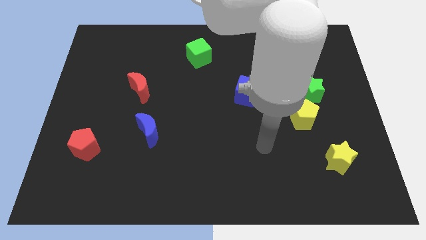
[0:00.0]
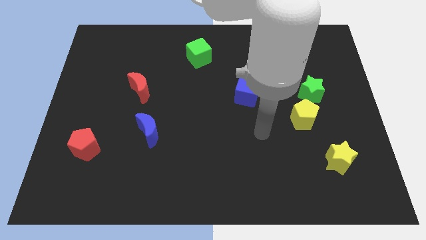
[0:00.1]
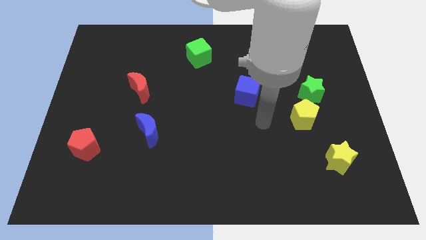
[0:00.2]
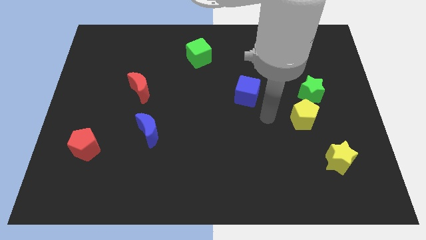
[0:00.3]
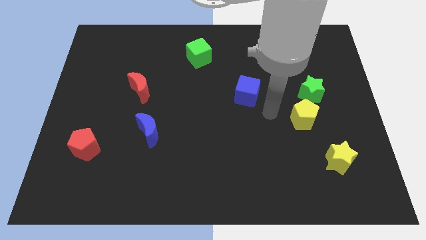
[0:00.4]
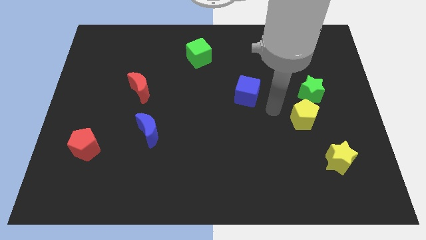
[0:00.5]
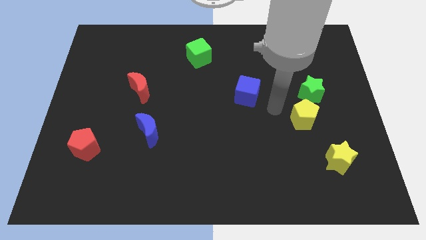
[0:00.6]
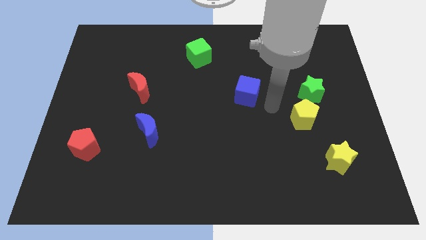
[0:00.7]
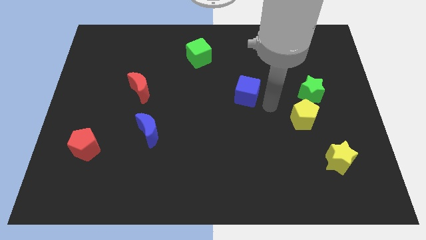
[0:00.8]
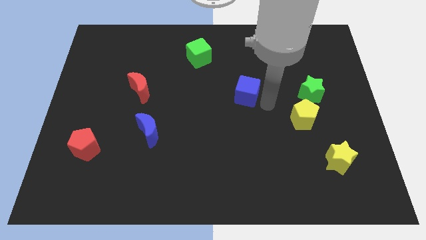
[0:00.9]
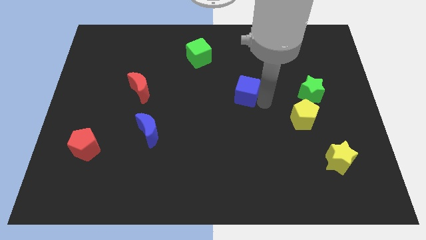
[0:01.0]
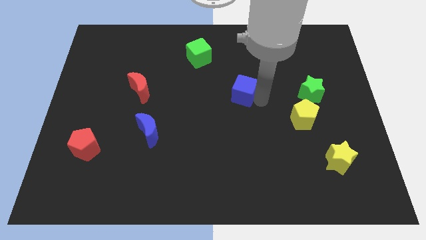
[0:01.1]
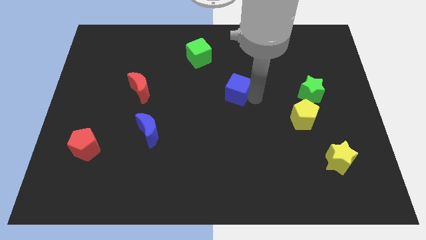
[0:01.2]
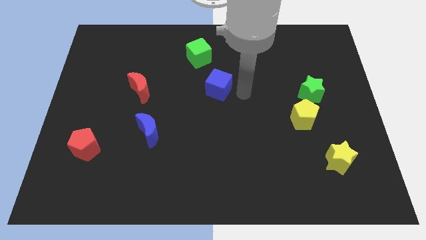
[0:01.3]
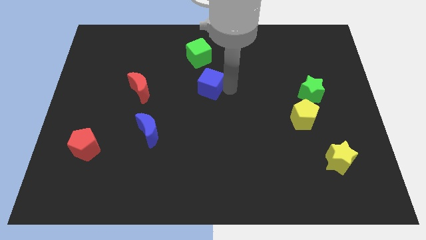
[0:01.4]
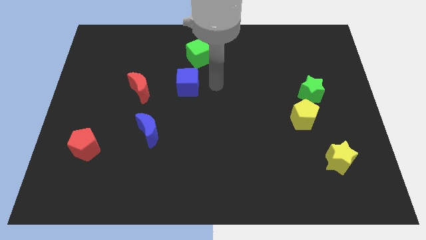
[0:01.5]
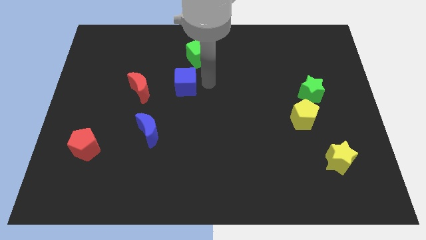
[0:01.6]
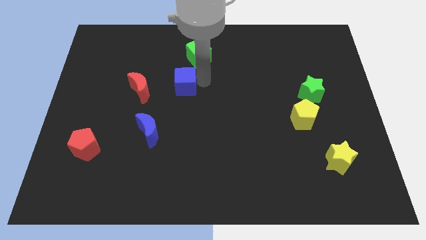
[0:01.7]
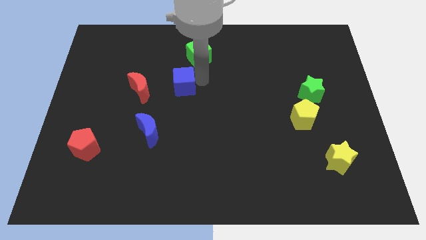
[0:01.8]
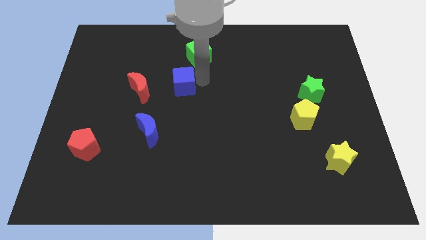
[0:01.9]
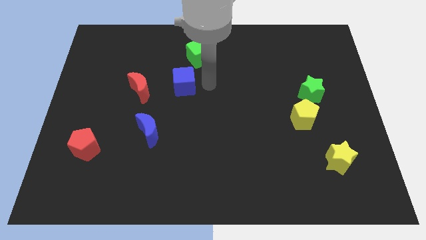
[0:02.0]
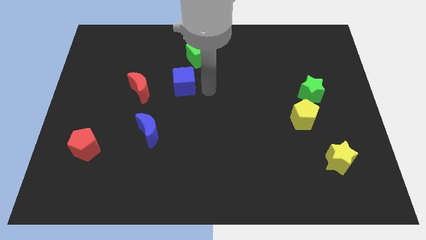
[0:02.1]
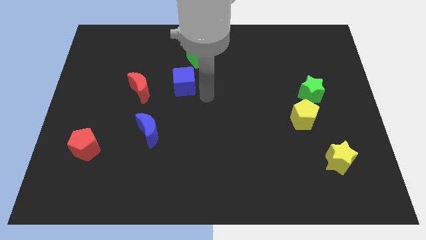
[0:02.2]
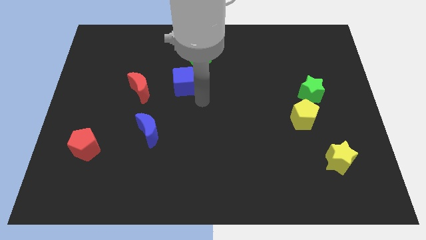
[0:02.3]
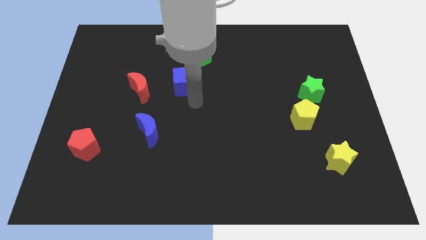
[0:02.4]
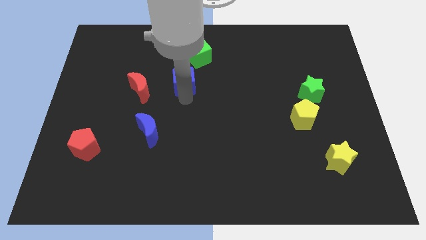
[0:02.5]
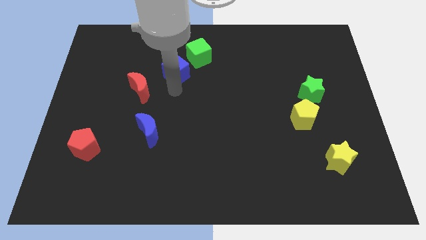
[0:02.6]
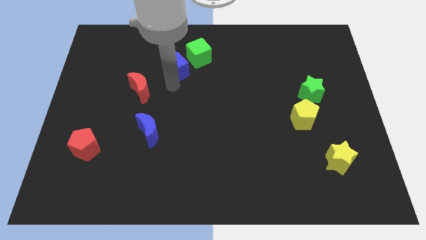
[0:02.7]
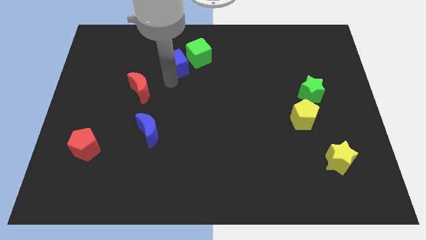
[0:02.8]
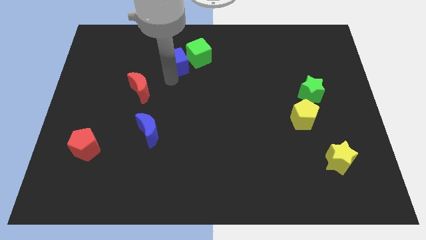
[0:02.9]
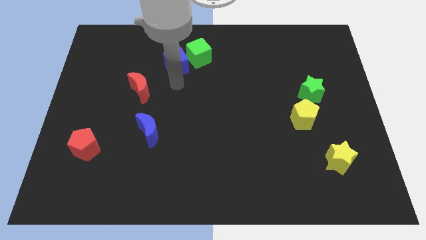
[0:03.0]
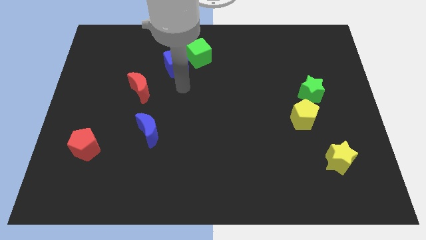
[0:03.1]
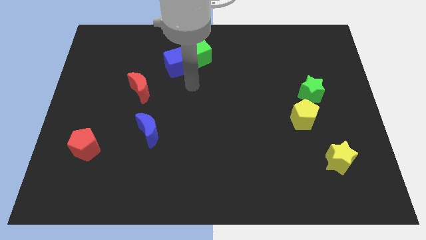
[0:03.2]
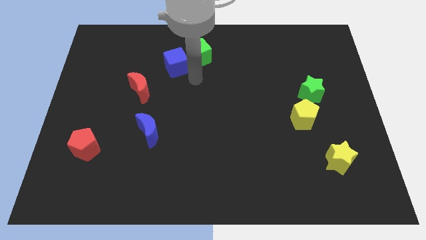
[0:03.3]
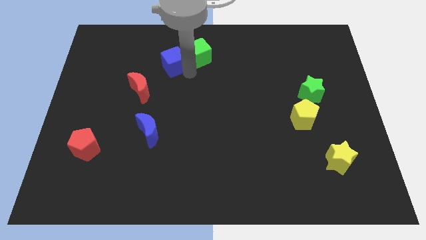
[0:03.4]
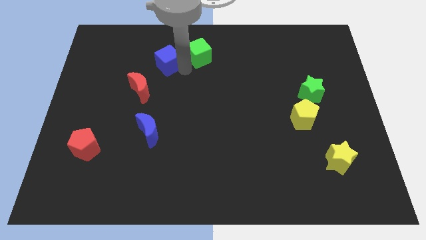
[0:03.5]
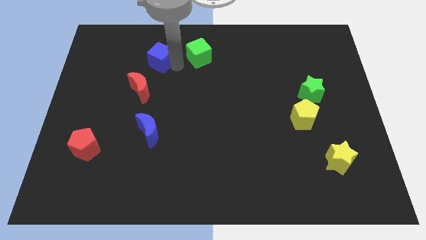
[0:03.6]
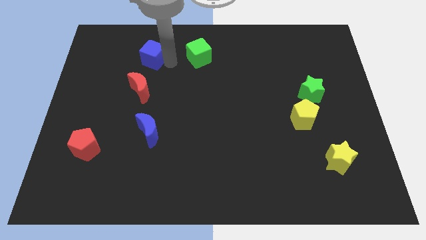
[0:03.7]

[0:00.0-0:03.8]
put the blue cube to the left of the green cube

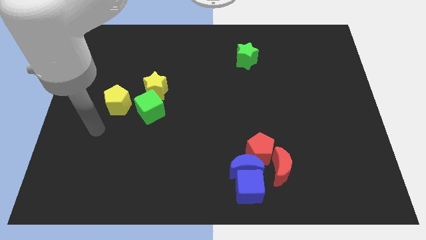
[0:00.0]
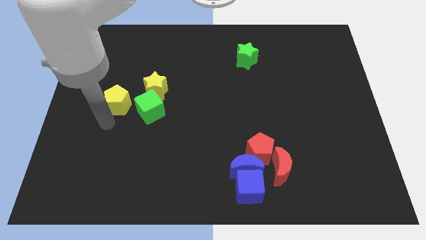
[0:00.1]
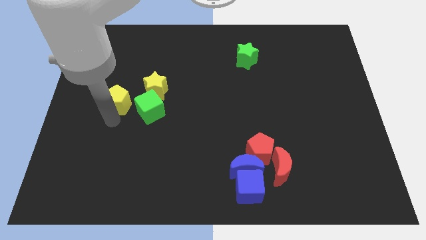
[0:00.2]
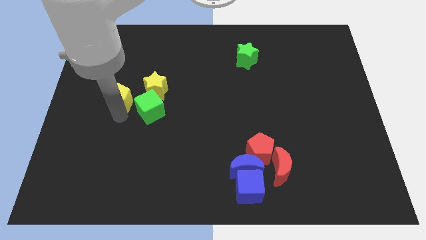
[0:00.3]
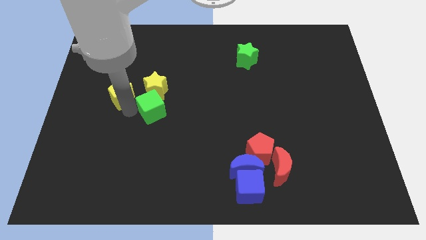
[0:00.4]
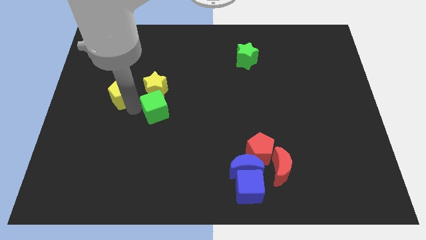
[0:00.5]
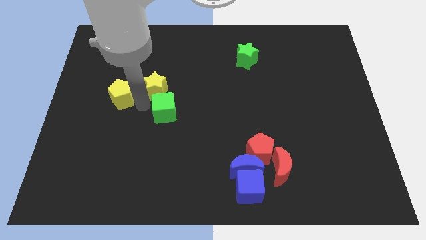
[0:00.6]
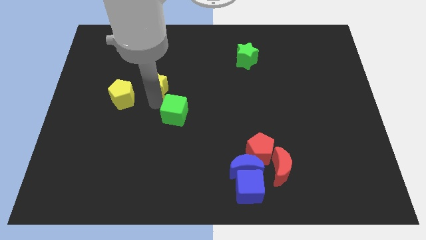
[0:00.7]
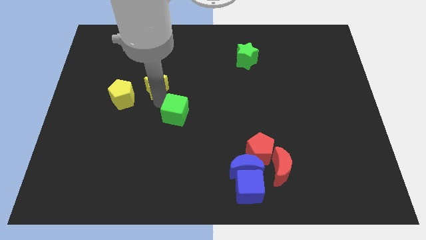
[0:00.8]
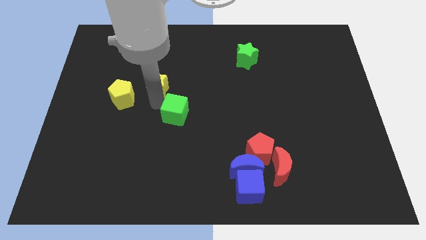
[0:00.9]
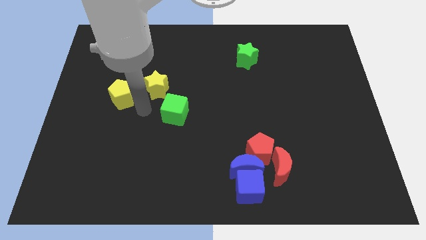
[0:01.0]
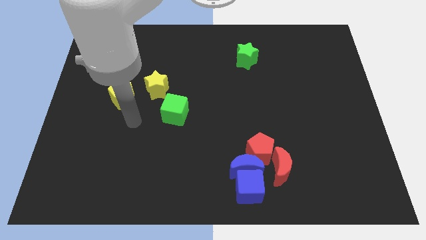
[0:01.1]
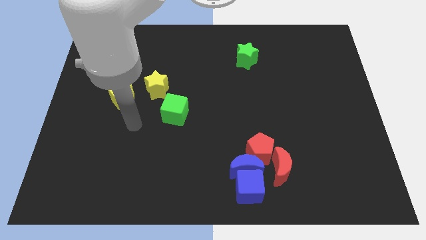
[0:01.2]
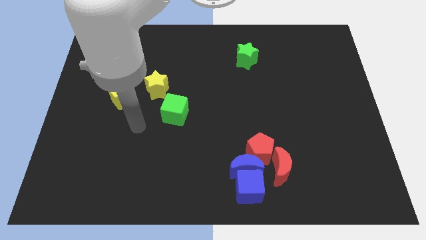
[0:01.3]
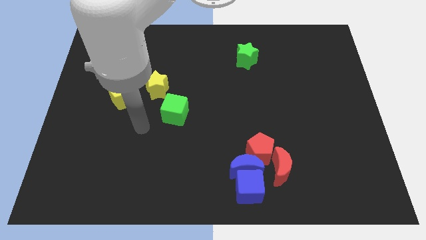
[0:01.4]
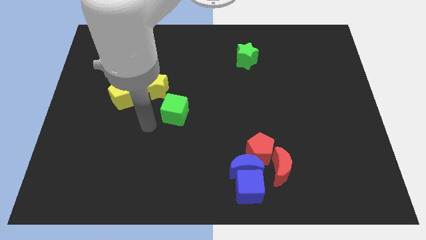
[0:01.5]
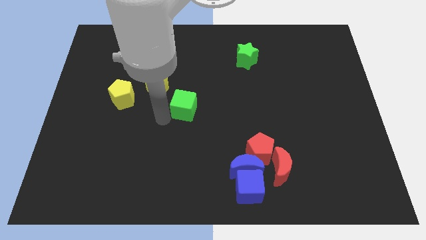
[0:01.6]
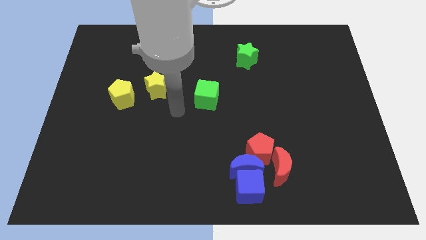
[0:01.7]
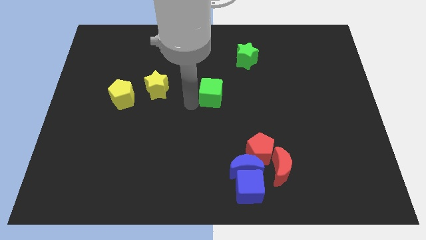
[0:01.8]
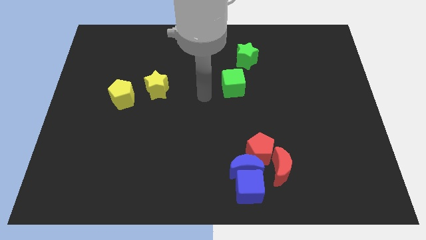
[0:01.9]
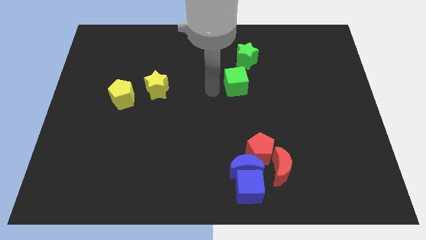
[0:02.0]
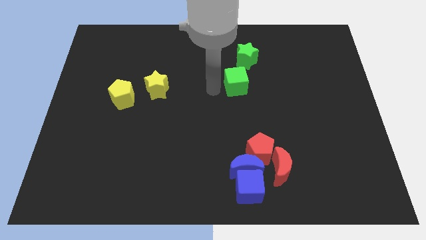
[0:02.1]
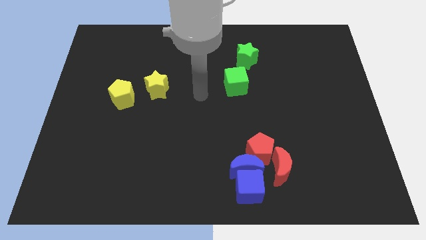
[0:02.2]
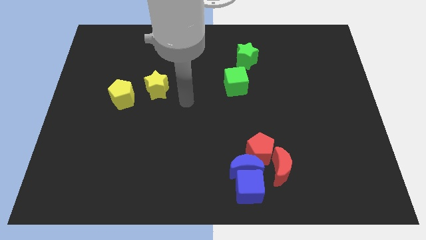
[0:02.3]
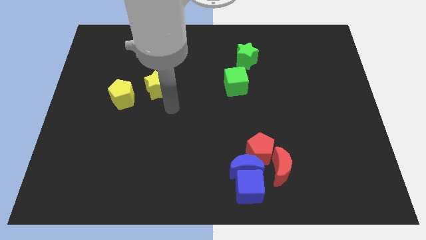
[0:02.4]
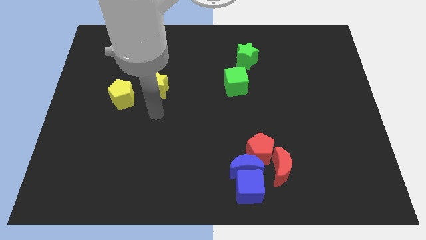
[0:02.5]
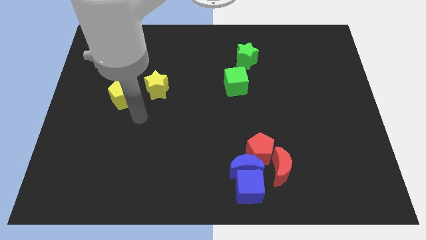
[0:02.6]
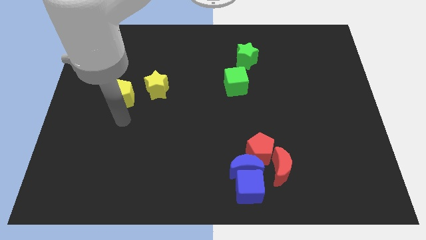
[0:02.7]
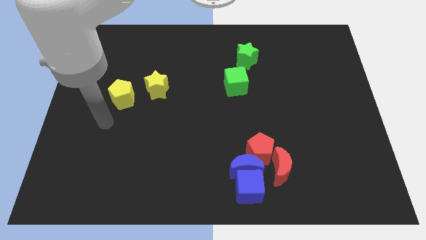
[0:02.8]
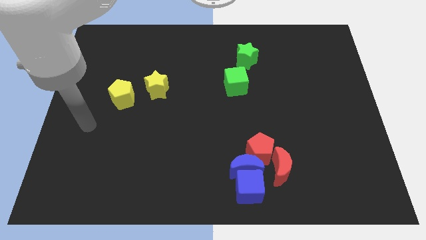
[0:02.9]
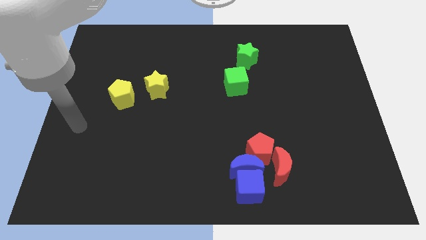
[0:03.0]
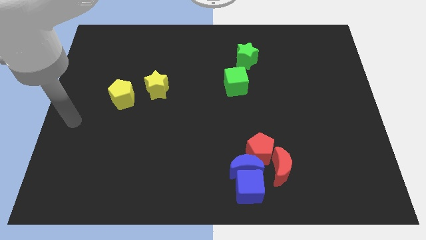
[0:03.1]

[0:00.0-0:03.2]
slide the green cube to the right of the yellow star

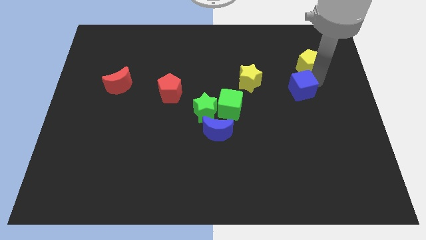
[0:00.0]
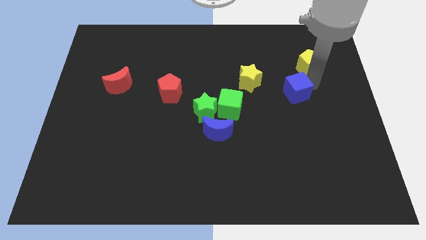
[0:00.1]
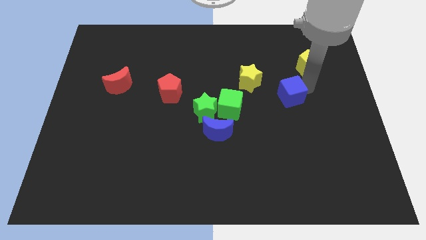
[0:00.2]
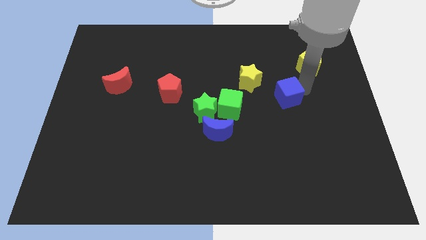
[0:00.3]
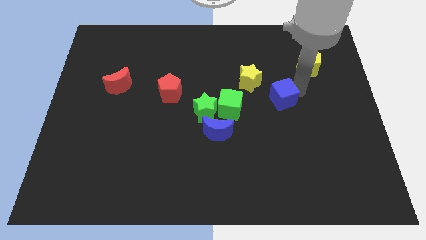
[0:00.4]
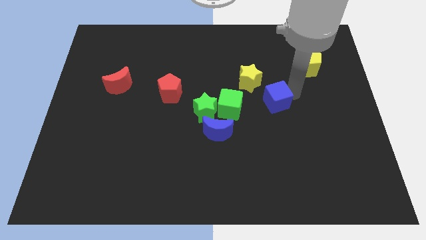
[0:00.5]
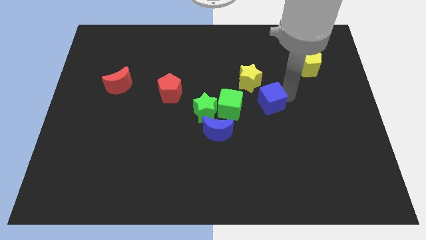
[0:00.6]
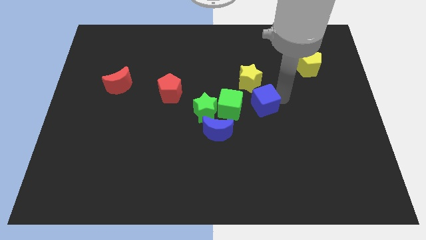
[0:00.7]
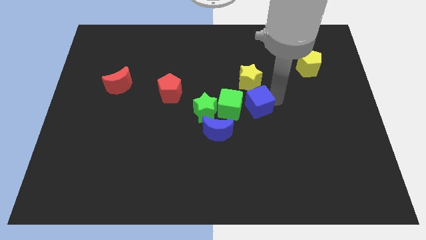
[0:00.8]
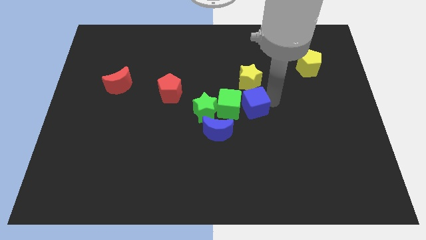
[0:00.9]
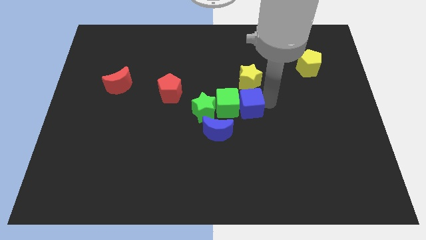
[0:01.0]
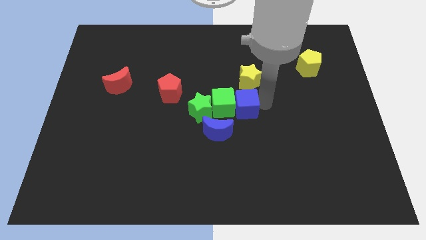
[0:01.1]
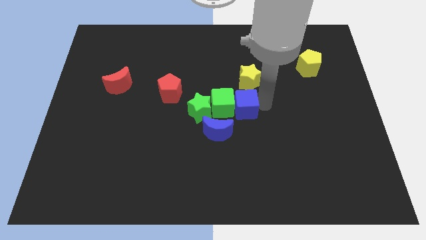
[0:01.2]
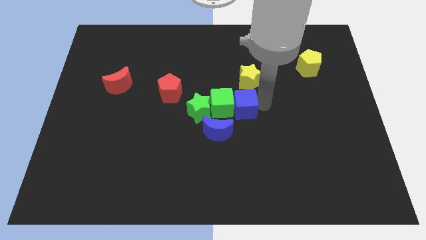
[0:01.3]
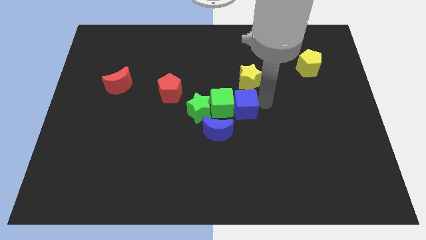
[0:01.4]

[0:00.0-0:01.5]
push the blue cube into the group of blocks

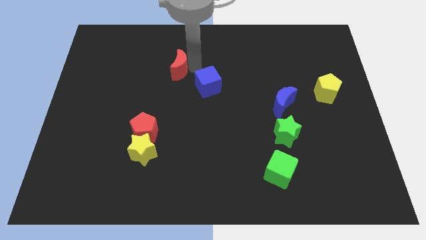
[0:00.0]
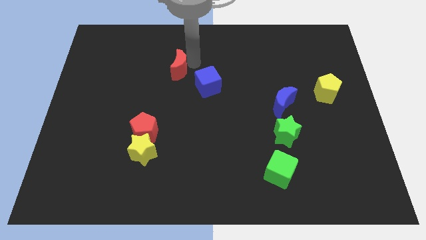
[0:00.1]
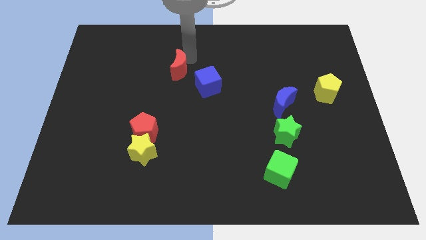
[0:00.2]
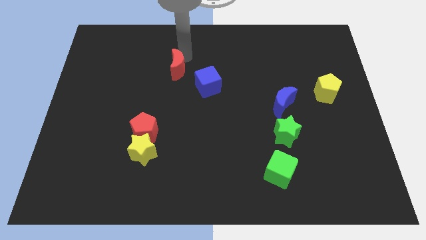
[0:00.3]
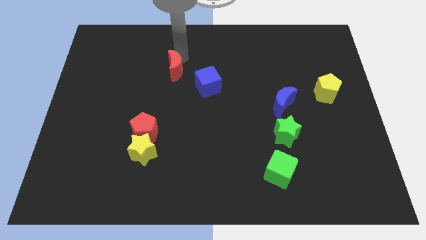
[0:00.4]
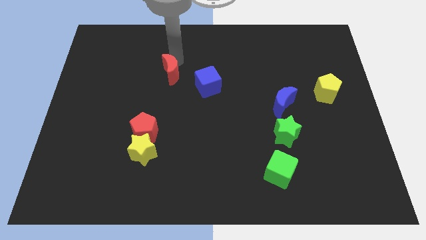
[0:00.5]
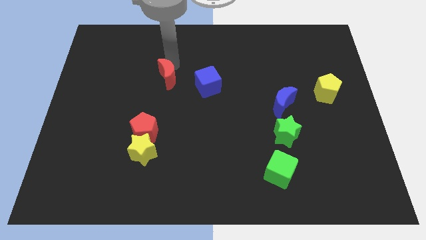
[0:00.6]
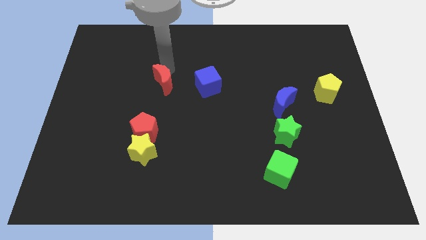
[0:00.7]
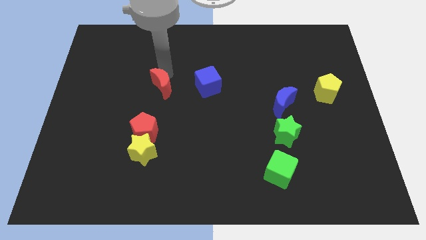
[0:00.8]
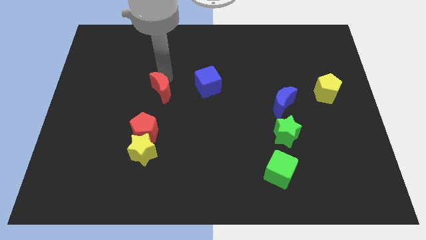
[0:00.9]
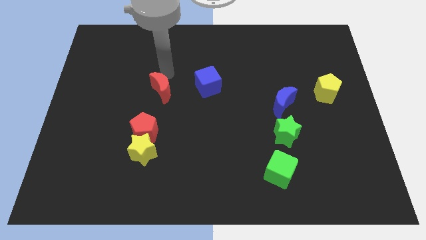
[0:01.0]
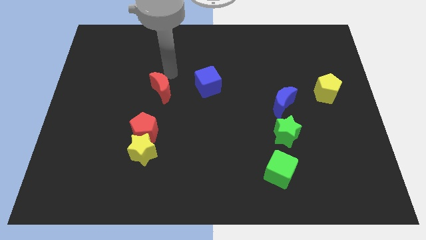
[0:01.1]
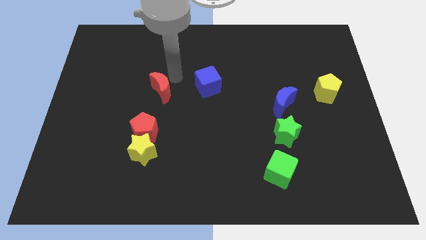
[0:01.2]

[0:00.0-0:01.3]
move the red crescent to the left of the blue cube
